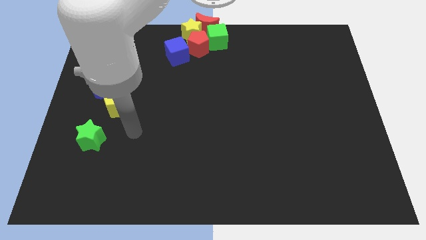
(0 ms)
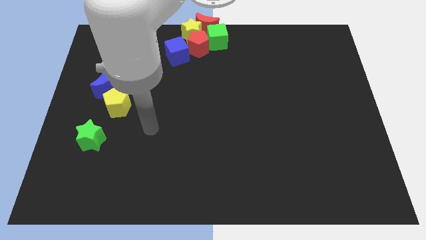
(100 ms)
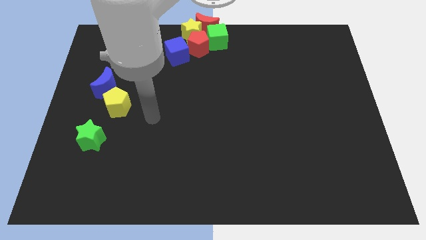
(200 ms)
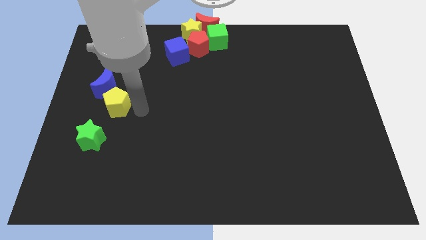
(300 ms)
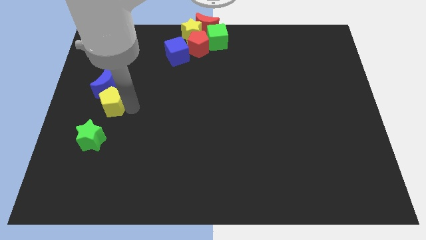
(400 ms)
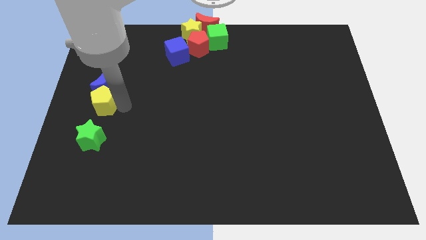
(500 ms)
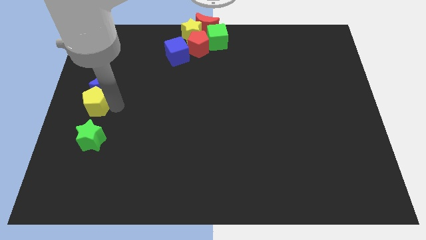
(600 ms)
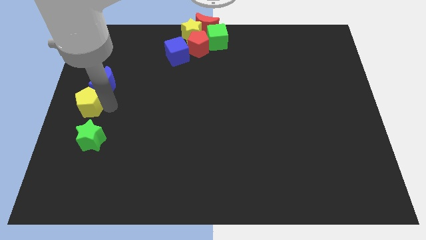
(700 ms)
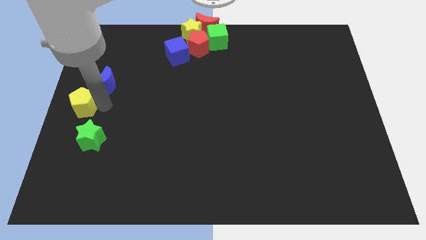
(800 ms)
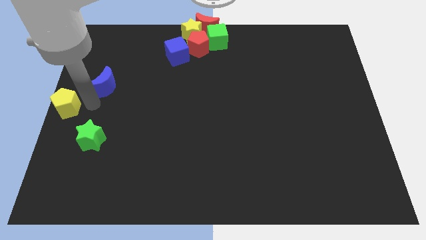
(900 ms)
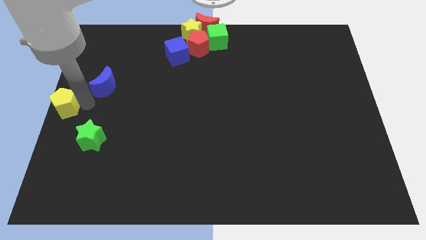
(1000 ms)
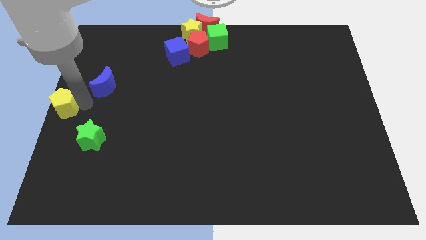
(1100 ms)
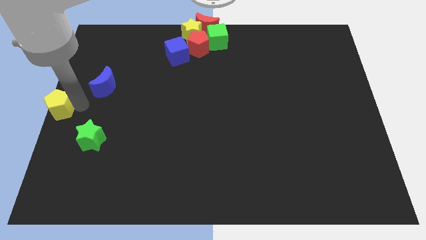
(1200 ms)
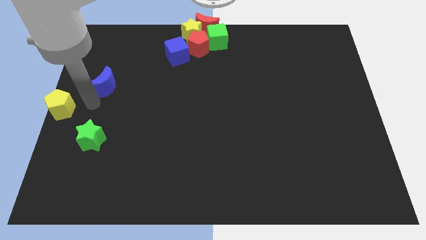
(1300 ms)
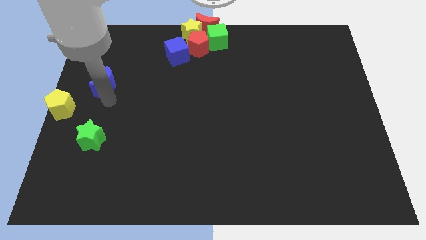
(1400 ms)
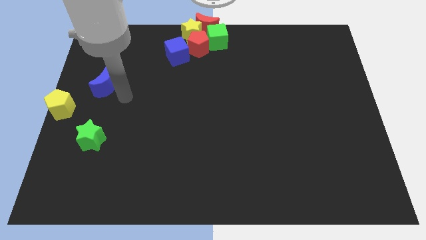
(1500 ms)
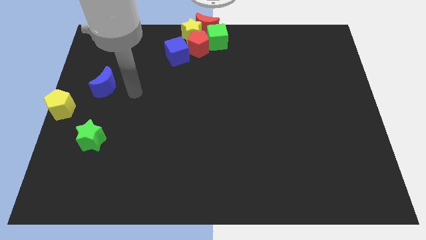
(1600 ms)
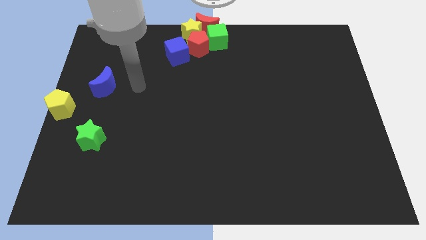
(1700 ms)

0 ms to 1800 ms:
push the yellow pentagon to the left side of the board

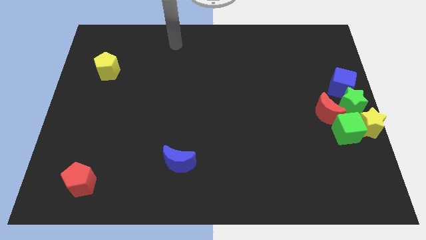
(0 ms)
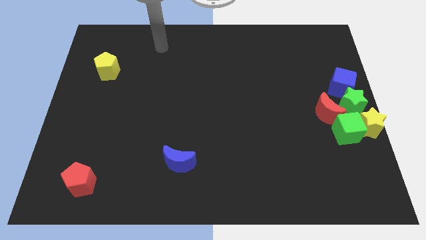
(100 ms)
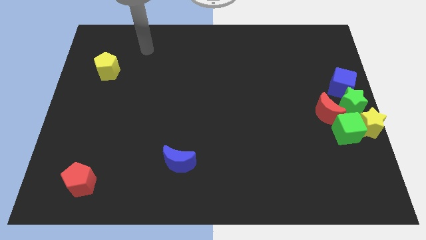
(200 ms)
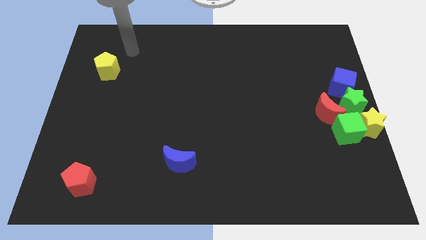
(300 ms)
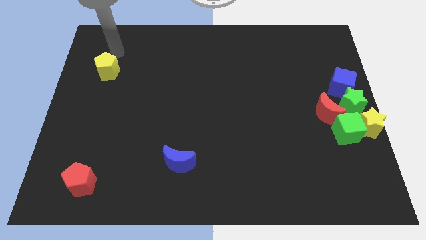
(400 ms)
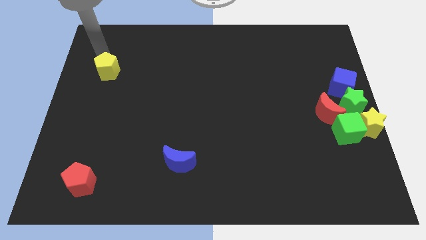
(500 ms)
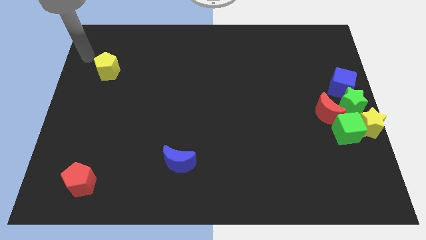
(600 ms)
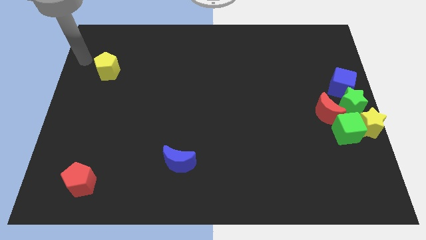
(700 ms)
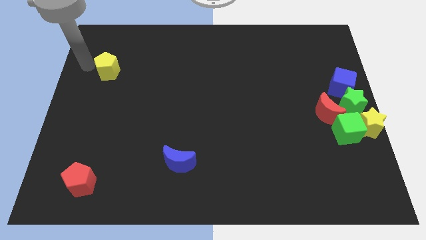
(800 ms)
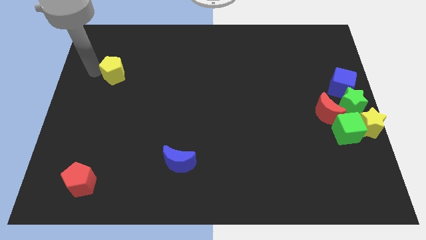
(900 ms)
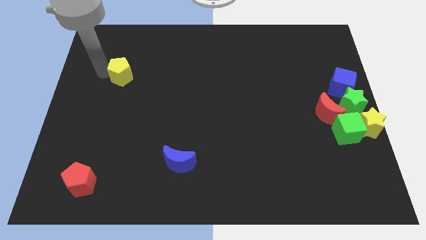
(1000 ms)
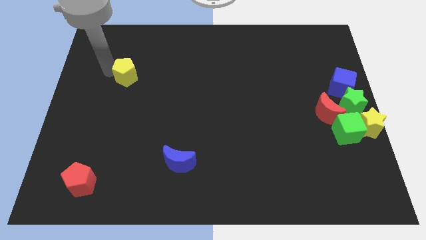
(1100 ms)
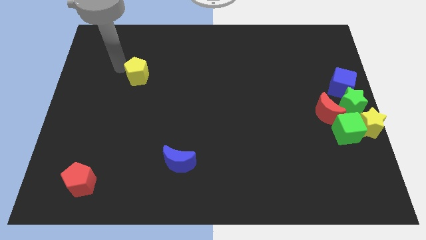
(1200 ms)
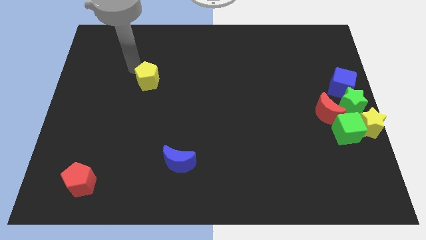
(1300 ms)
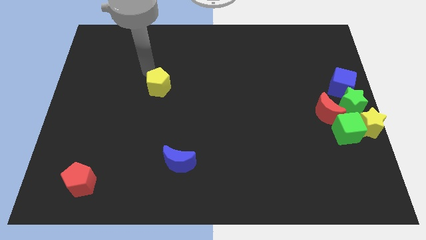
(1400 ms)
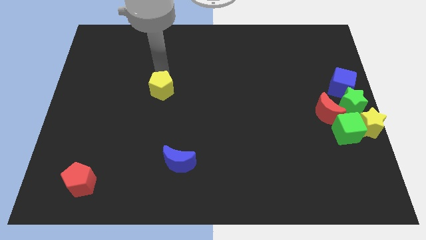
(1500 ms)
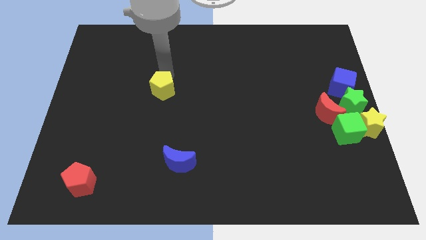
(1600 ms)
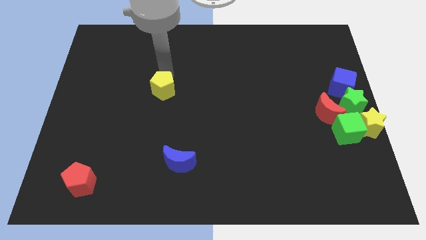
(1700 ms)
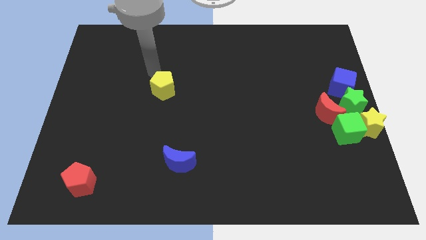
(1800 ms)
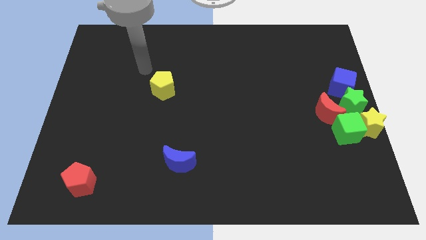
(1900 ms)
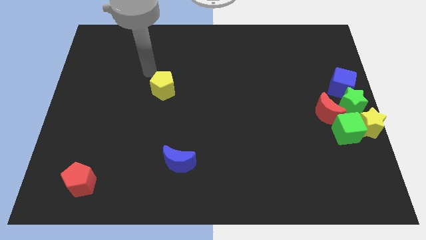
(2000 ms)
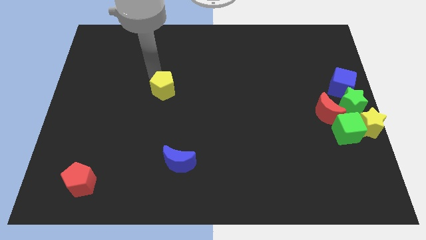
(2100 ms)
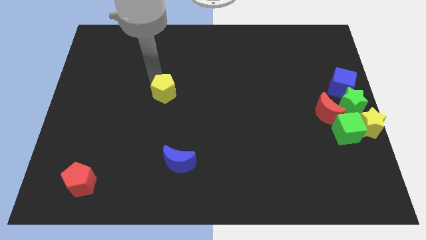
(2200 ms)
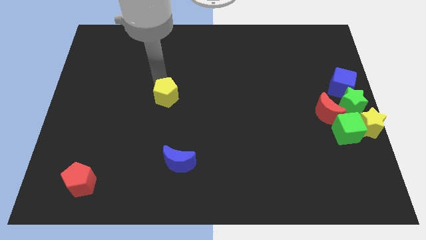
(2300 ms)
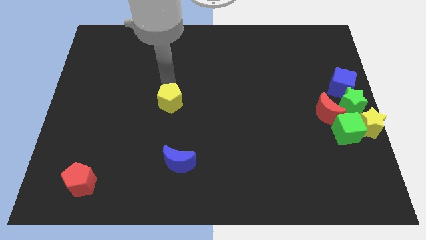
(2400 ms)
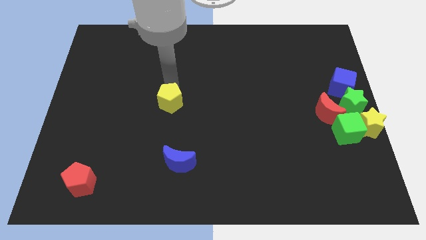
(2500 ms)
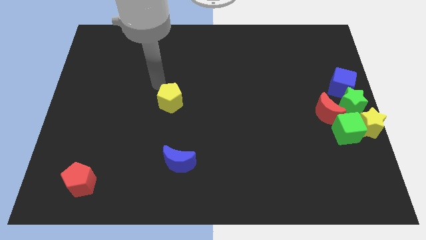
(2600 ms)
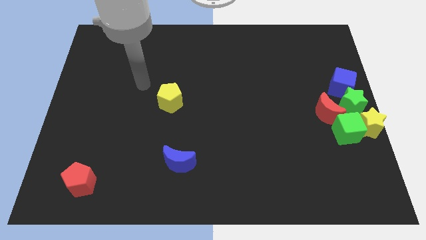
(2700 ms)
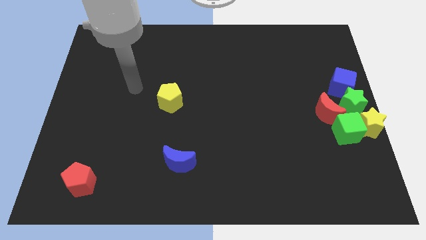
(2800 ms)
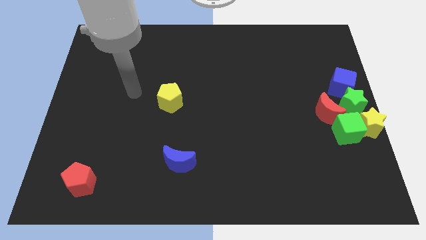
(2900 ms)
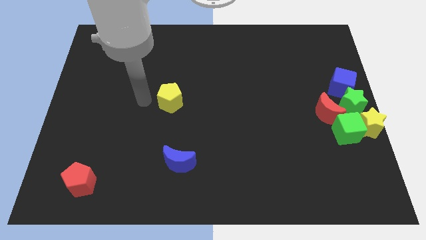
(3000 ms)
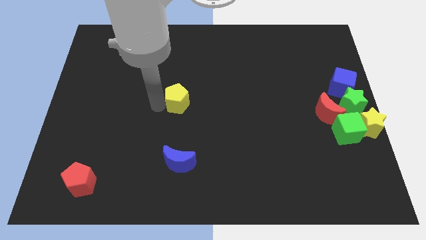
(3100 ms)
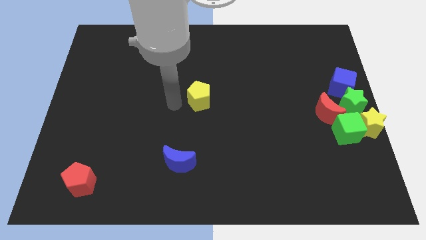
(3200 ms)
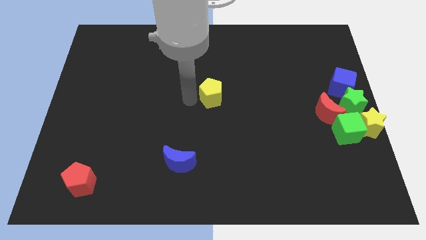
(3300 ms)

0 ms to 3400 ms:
push the yellow pentagon to the center of the board

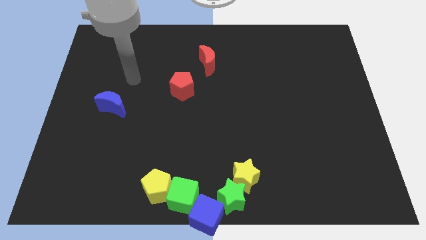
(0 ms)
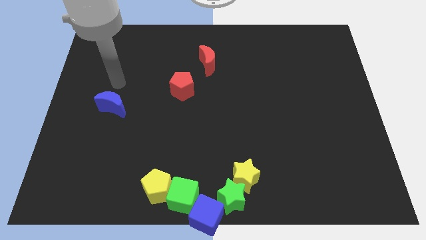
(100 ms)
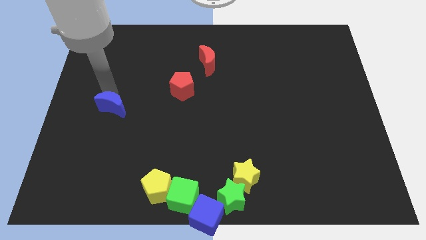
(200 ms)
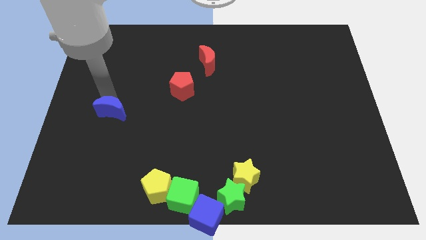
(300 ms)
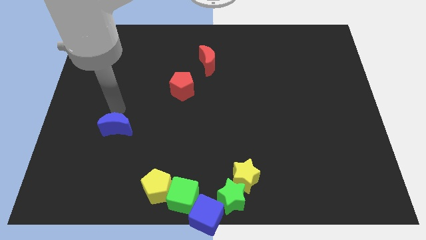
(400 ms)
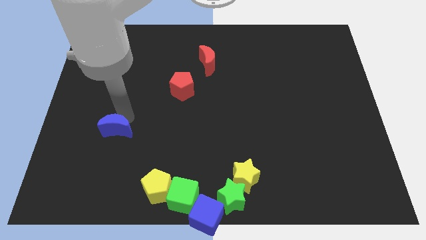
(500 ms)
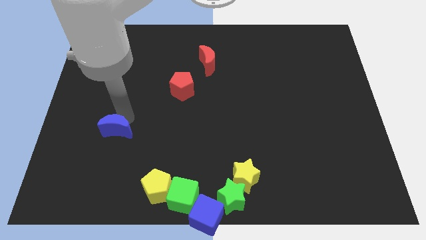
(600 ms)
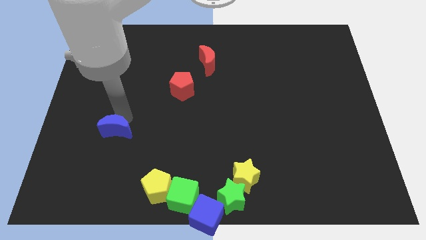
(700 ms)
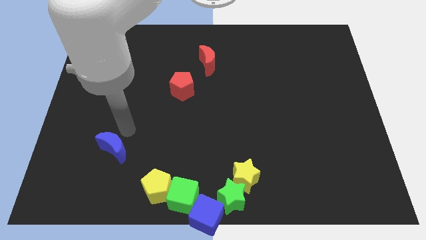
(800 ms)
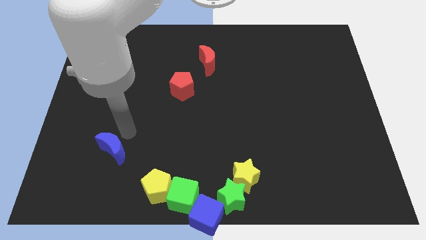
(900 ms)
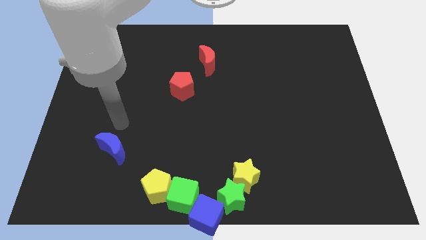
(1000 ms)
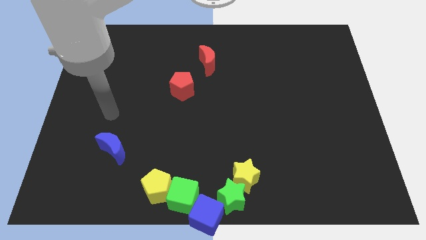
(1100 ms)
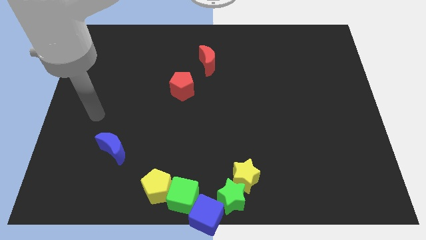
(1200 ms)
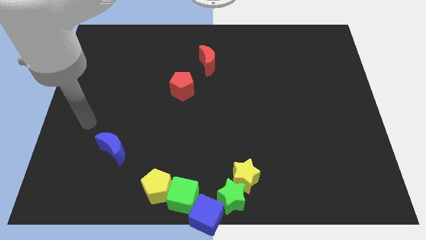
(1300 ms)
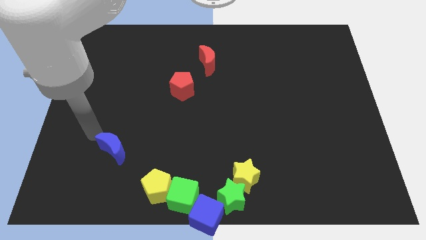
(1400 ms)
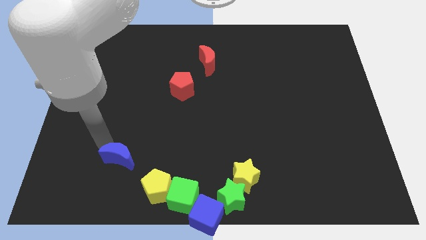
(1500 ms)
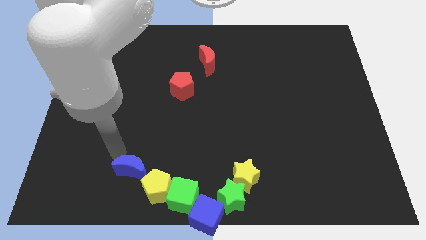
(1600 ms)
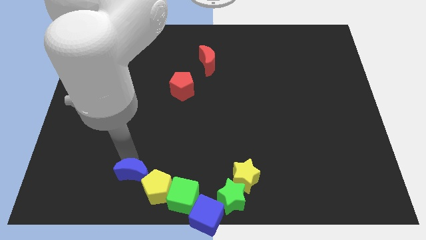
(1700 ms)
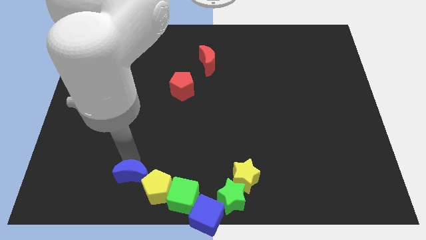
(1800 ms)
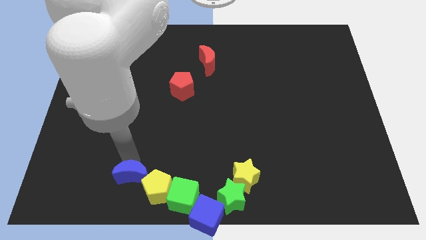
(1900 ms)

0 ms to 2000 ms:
move the blue moon to the top left side of the yellow pentagon

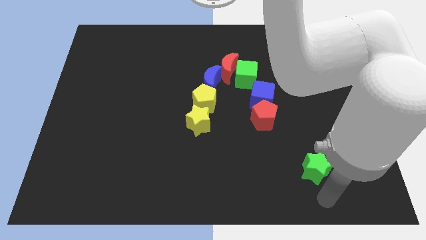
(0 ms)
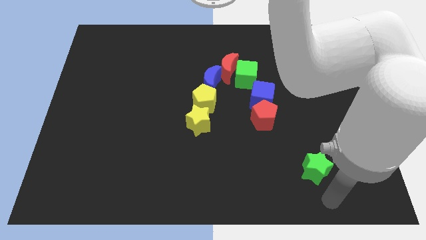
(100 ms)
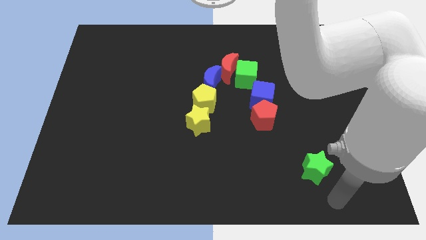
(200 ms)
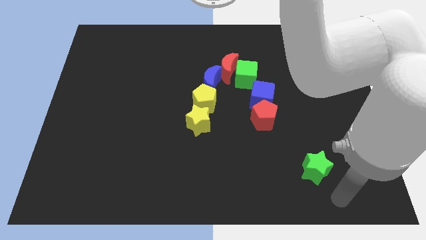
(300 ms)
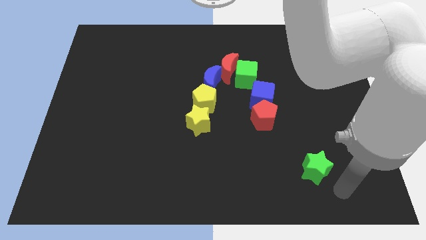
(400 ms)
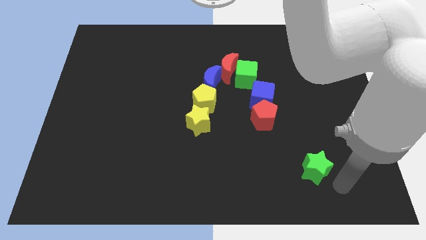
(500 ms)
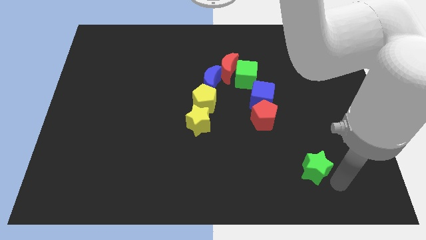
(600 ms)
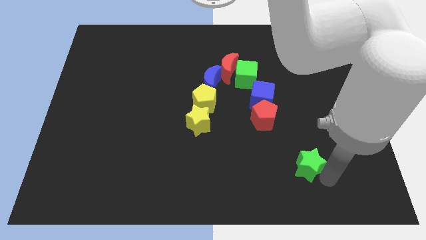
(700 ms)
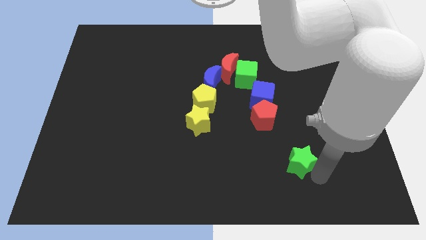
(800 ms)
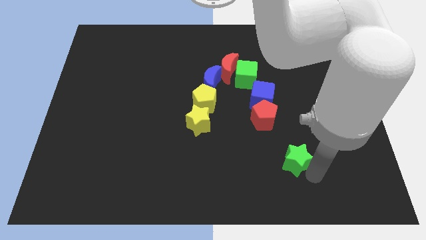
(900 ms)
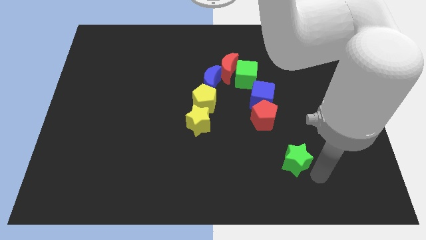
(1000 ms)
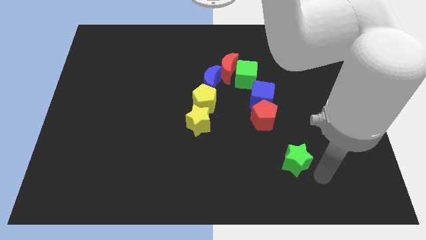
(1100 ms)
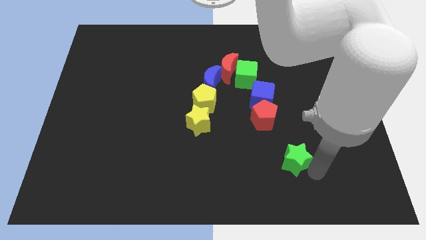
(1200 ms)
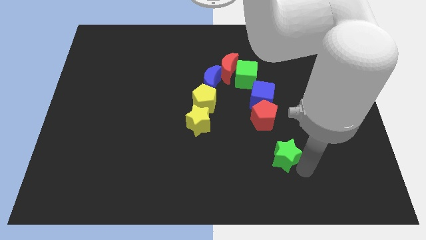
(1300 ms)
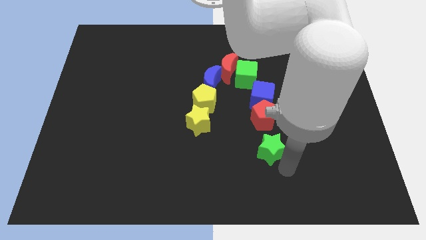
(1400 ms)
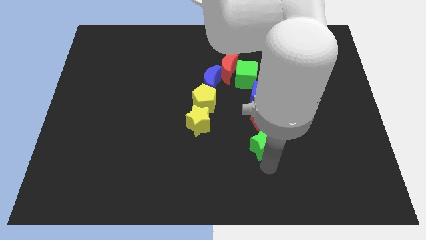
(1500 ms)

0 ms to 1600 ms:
place the green star down to the red pentagon

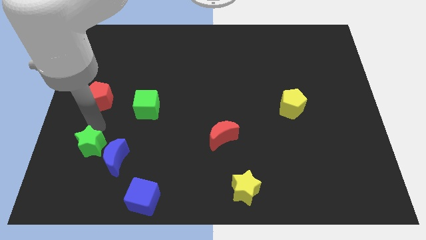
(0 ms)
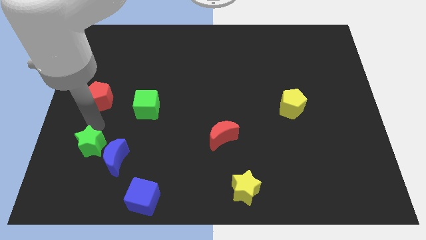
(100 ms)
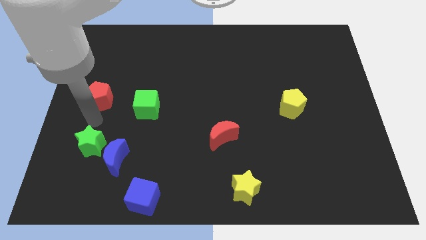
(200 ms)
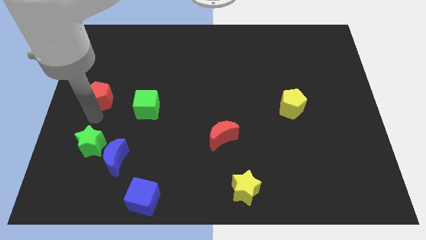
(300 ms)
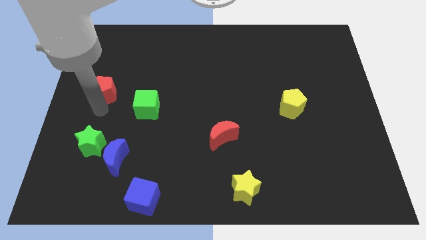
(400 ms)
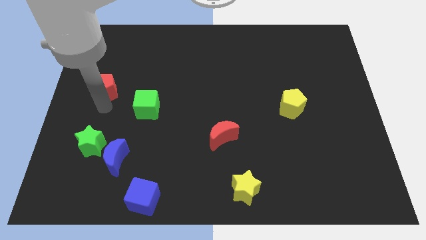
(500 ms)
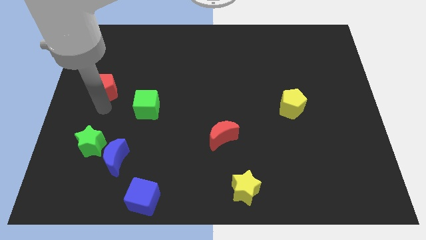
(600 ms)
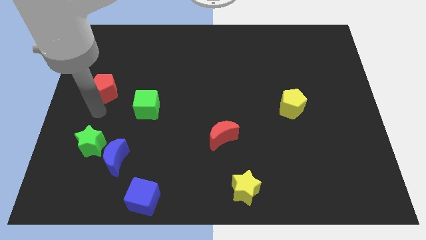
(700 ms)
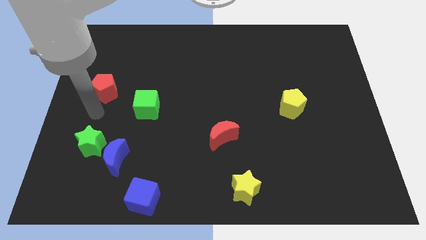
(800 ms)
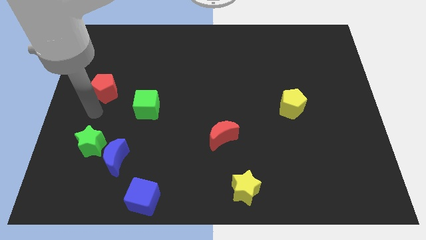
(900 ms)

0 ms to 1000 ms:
slightly push the red pentagon towards the top side of the board
